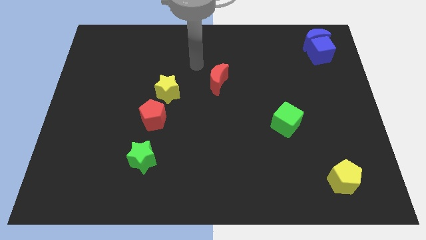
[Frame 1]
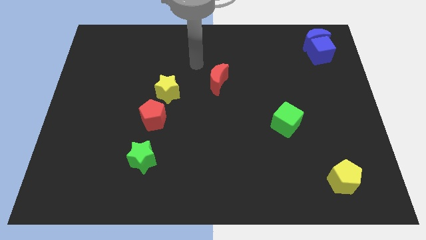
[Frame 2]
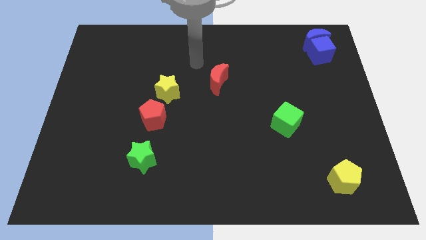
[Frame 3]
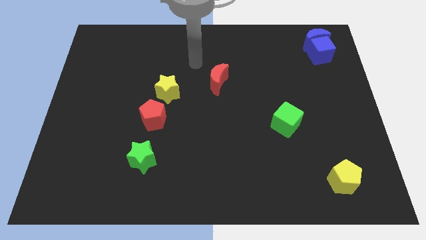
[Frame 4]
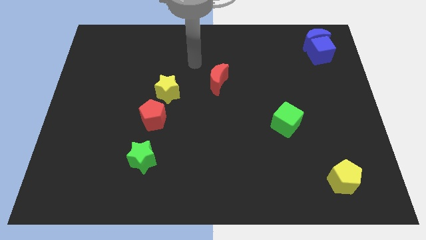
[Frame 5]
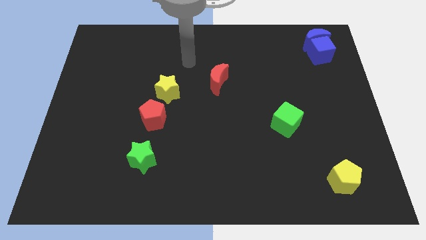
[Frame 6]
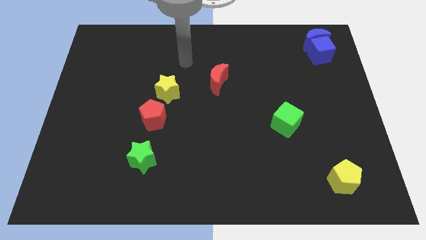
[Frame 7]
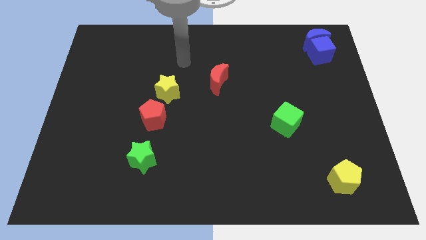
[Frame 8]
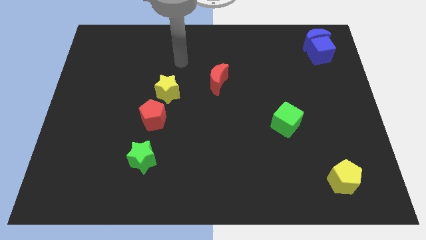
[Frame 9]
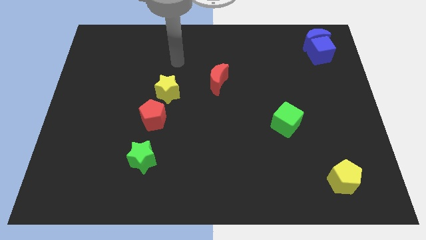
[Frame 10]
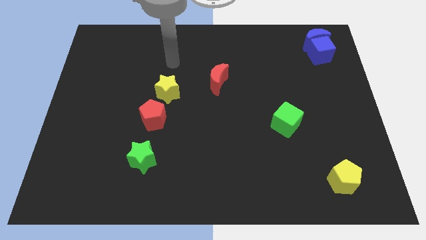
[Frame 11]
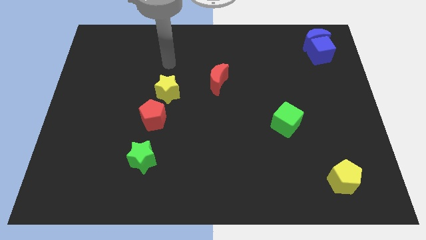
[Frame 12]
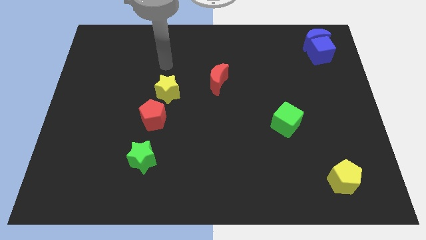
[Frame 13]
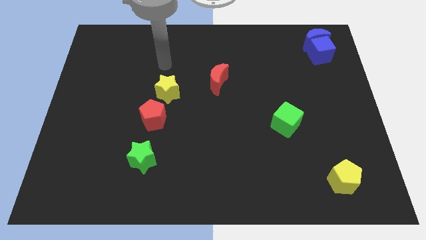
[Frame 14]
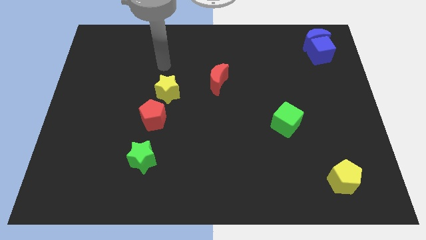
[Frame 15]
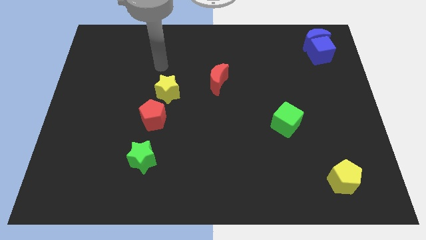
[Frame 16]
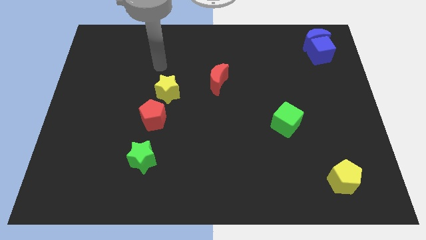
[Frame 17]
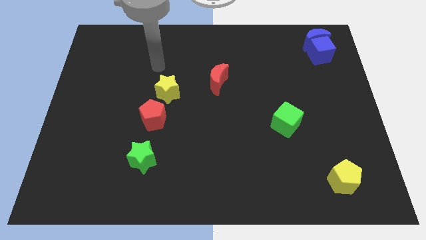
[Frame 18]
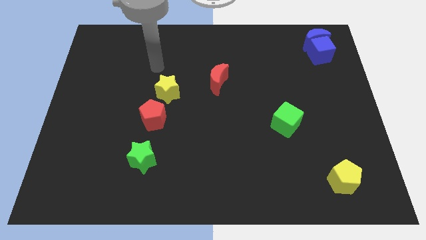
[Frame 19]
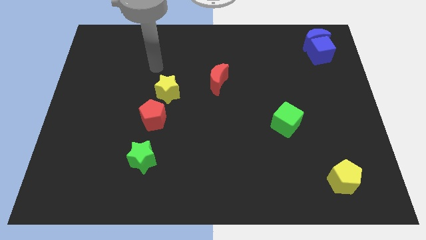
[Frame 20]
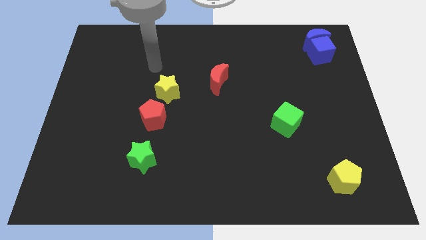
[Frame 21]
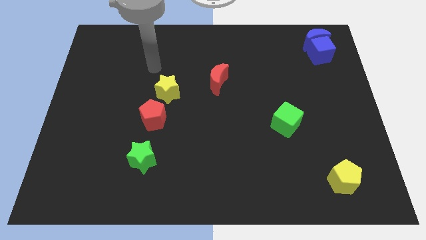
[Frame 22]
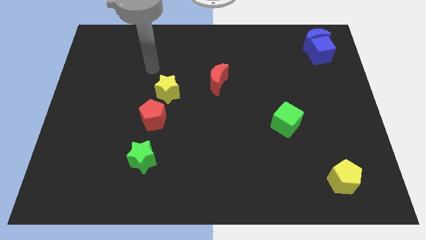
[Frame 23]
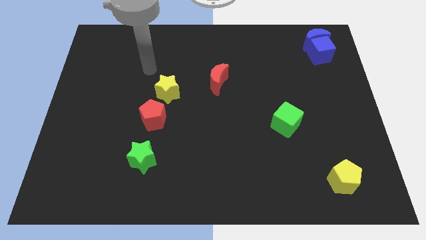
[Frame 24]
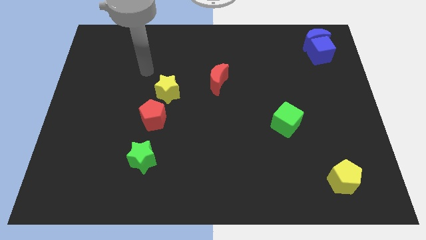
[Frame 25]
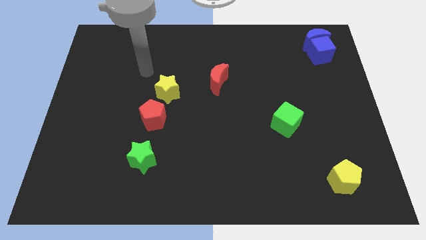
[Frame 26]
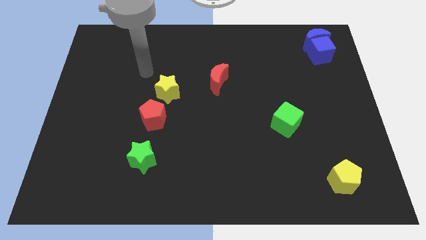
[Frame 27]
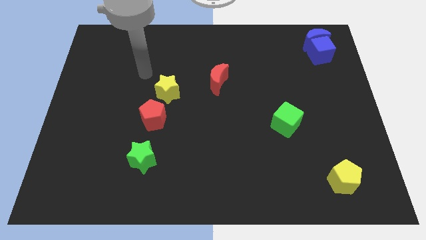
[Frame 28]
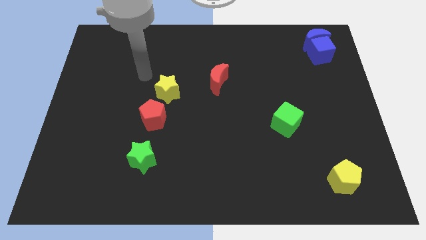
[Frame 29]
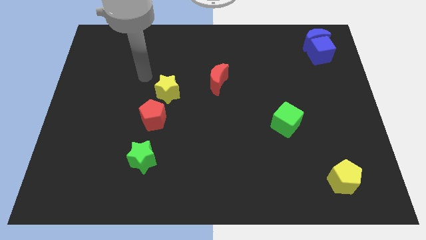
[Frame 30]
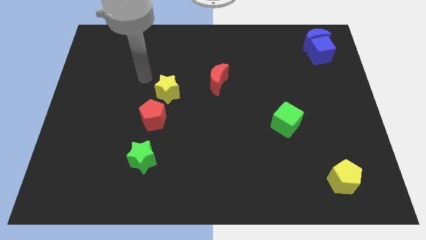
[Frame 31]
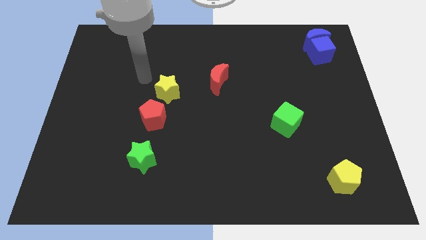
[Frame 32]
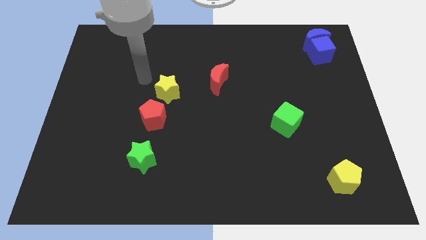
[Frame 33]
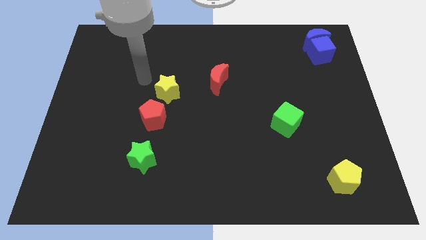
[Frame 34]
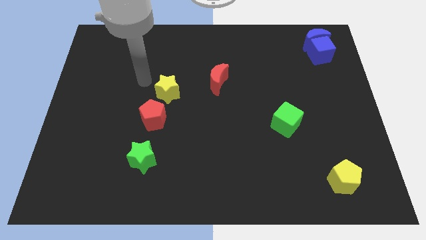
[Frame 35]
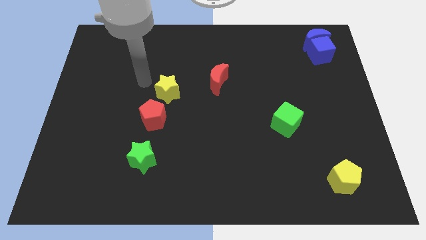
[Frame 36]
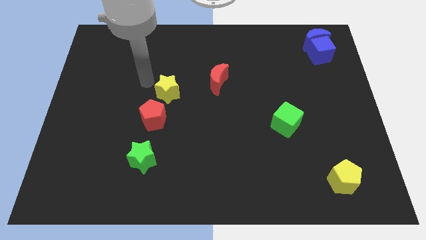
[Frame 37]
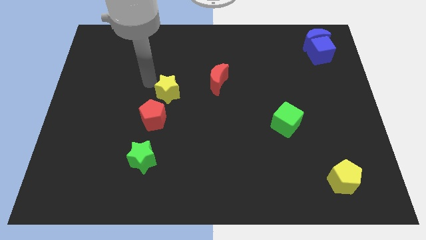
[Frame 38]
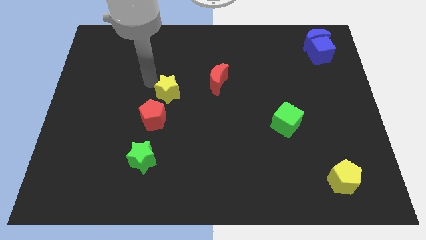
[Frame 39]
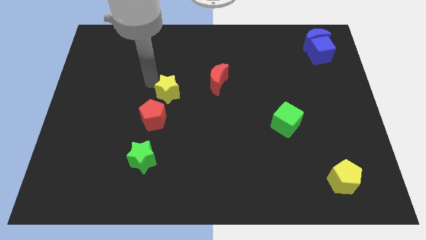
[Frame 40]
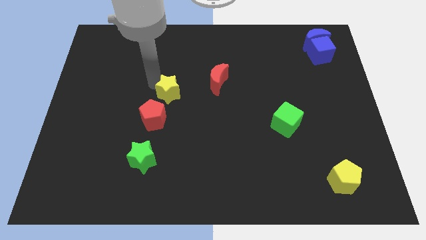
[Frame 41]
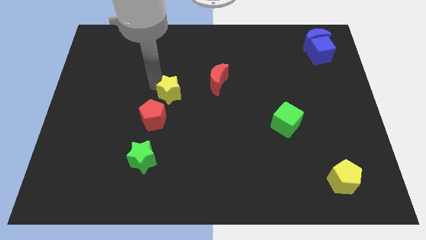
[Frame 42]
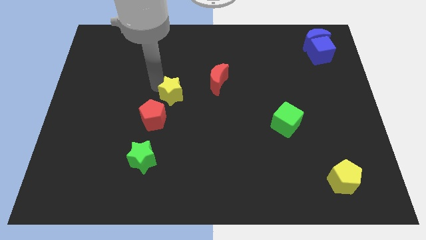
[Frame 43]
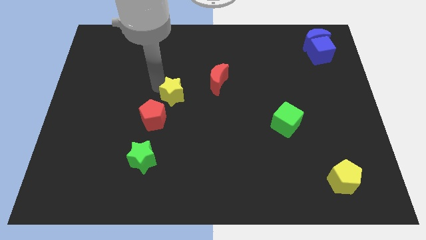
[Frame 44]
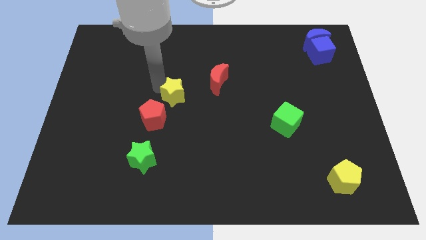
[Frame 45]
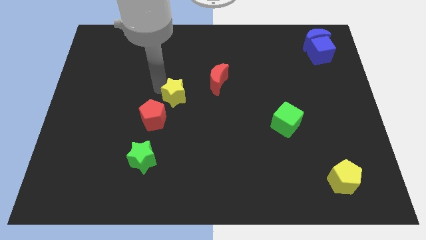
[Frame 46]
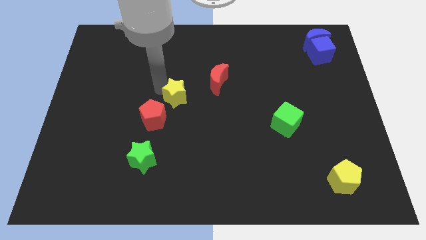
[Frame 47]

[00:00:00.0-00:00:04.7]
place the yellow star above the red pentagon

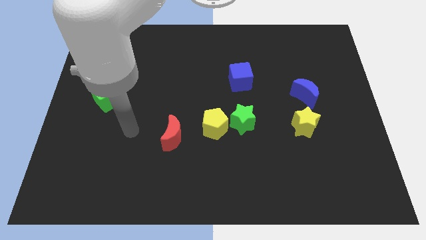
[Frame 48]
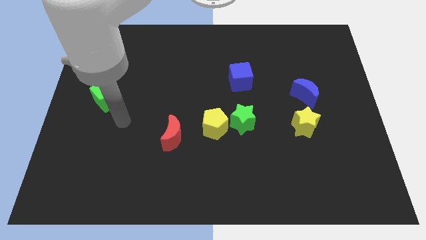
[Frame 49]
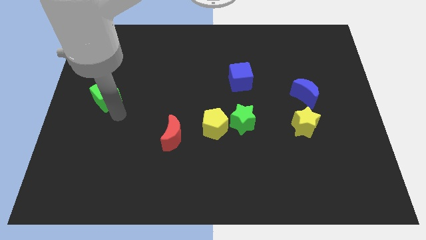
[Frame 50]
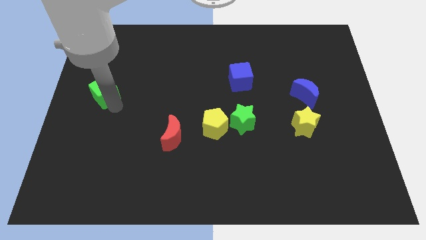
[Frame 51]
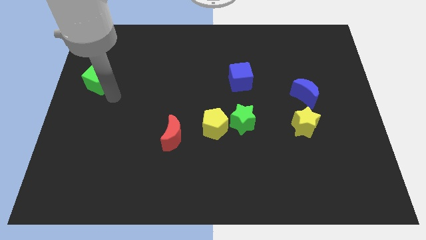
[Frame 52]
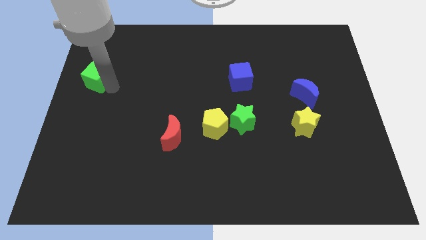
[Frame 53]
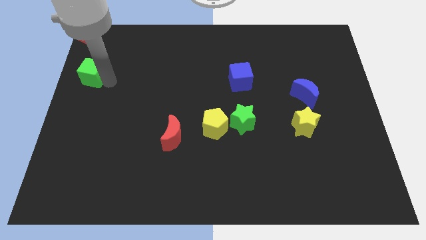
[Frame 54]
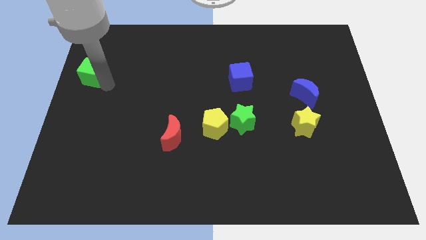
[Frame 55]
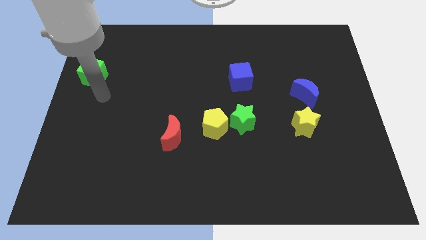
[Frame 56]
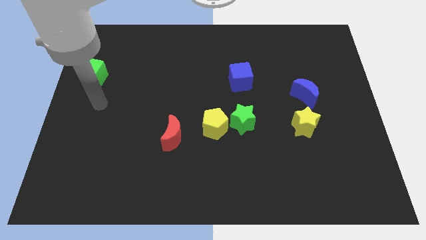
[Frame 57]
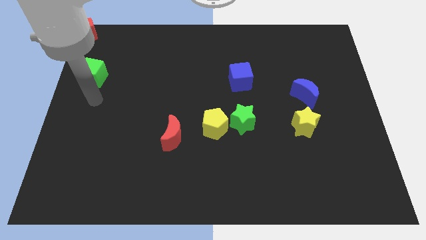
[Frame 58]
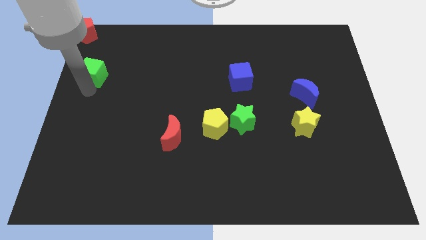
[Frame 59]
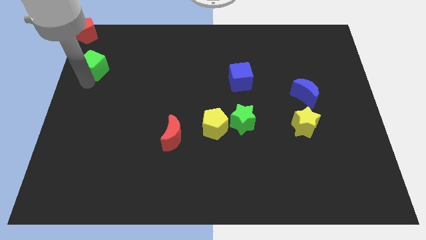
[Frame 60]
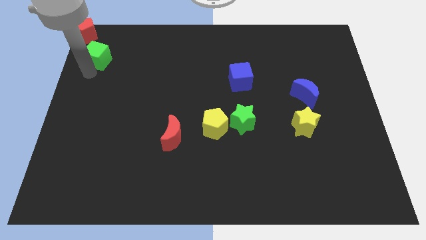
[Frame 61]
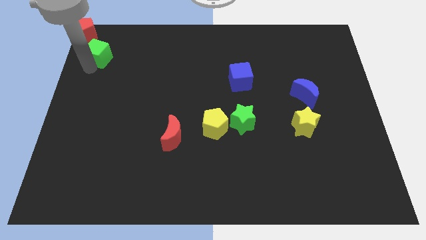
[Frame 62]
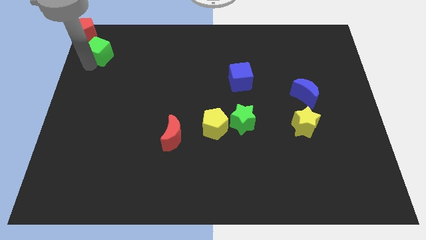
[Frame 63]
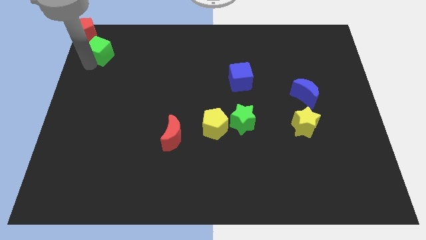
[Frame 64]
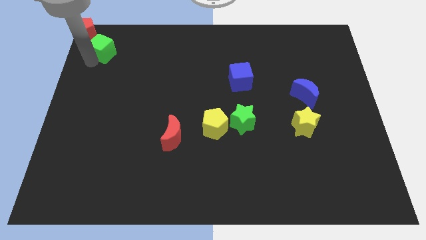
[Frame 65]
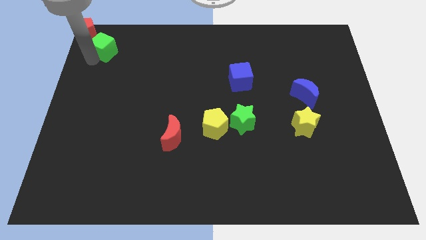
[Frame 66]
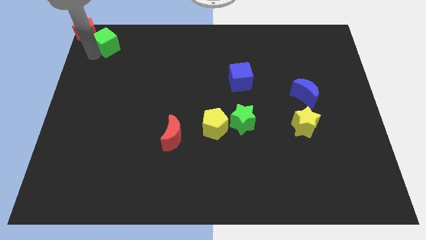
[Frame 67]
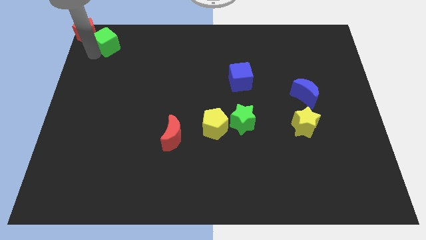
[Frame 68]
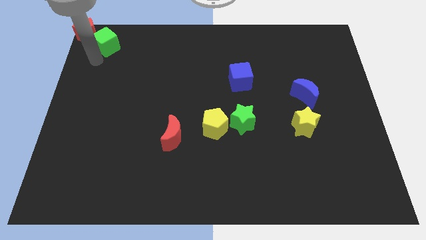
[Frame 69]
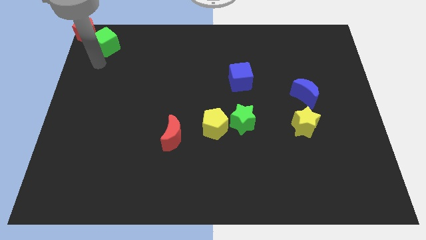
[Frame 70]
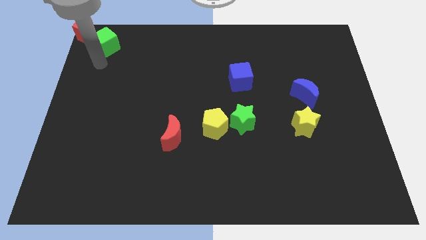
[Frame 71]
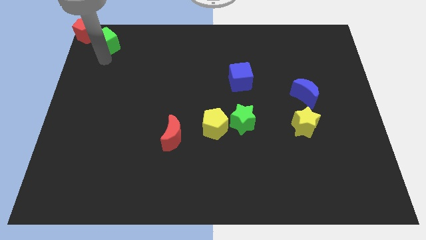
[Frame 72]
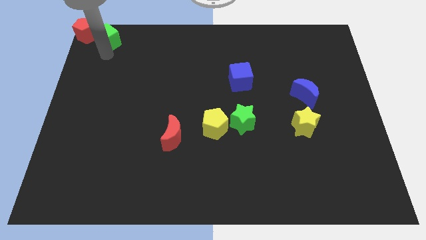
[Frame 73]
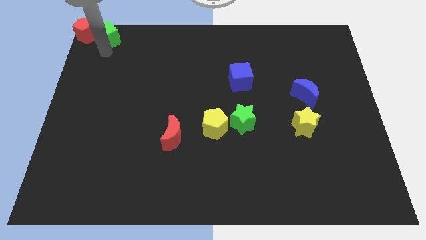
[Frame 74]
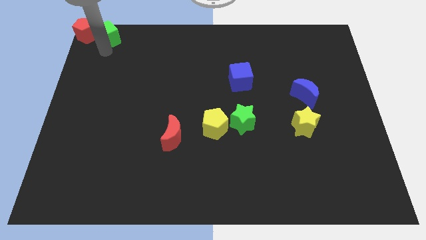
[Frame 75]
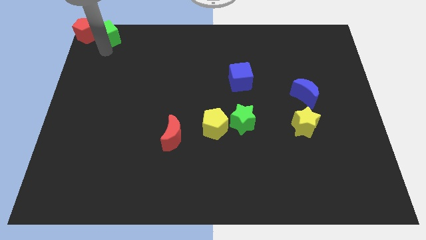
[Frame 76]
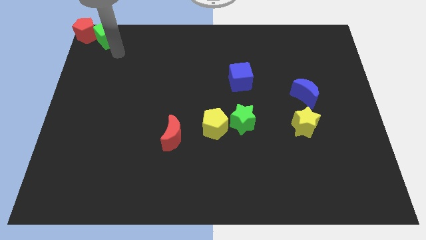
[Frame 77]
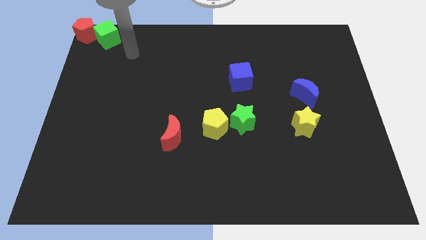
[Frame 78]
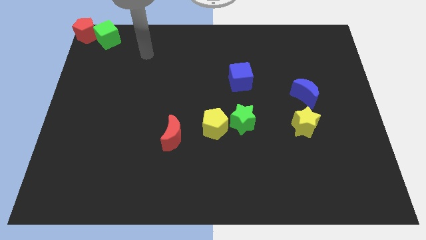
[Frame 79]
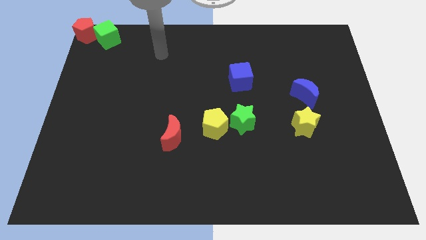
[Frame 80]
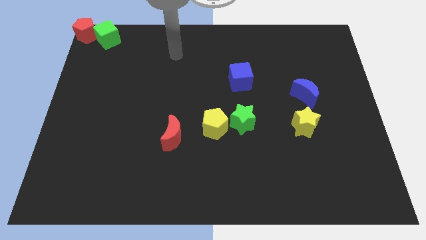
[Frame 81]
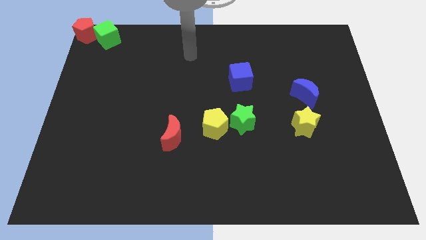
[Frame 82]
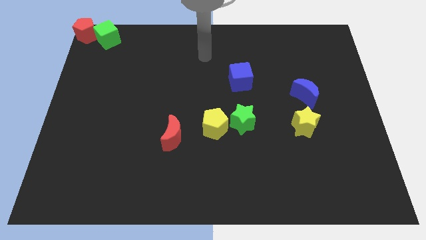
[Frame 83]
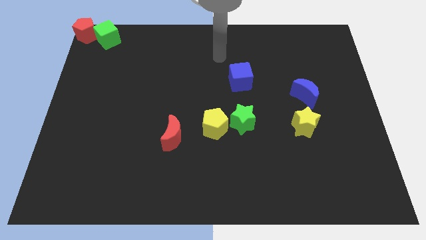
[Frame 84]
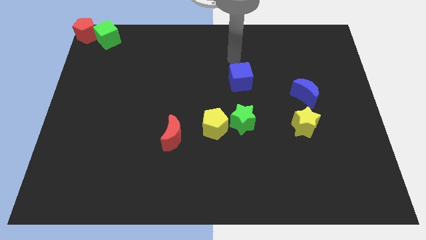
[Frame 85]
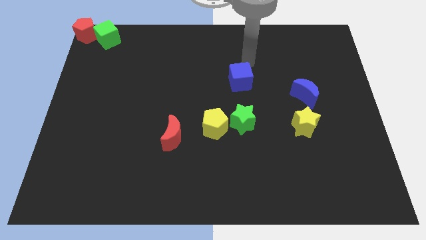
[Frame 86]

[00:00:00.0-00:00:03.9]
push the green cube to the top left corner near to the red pentagon
